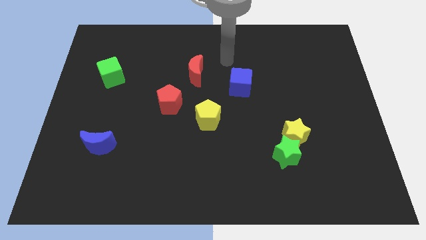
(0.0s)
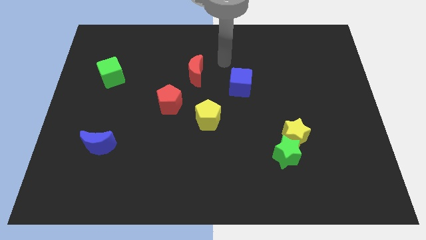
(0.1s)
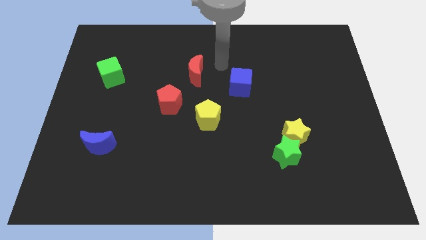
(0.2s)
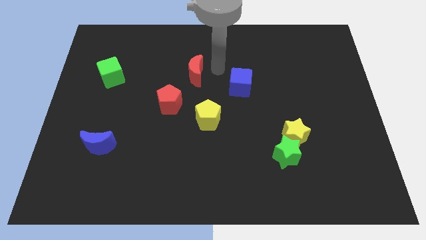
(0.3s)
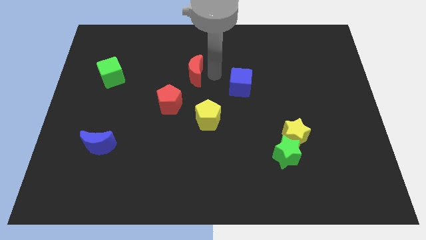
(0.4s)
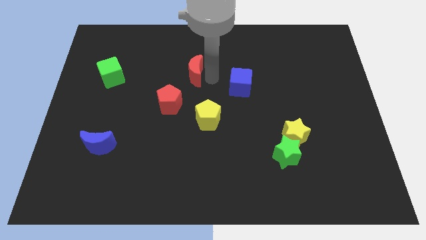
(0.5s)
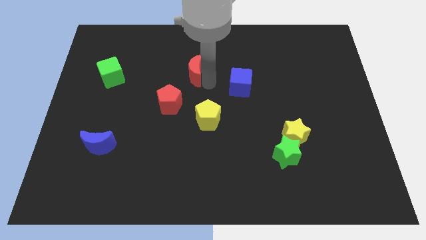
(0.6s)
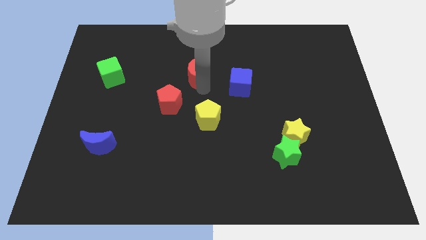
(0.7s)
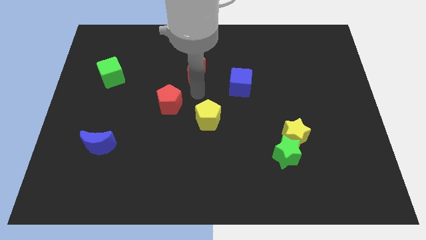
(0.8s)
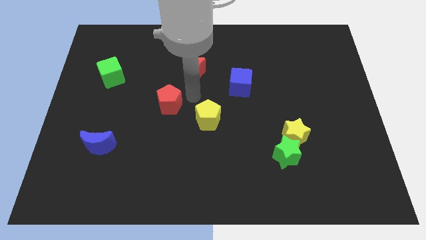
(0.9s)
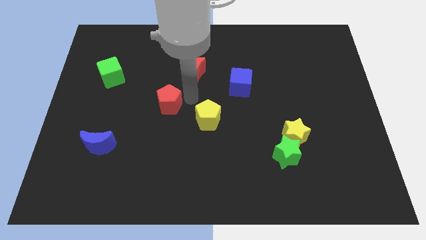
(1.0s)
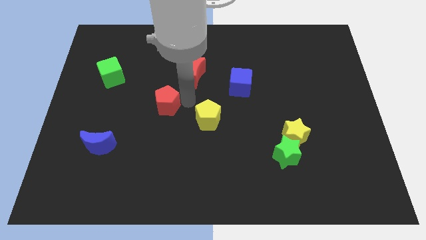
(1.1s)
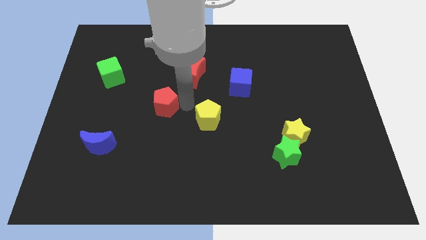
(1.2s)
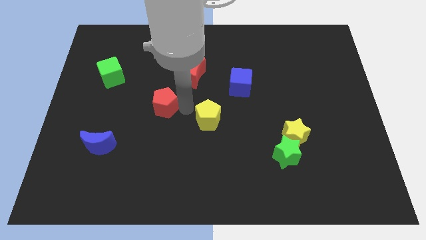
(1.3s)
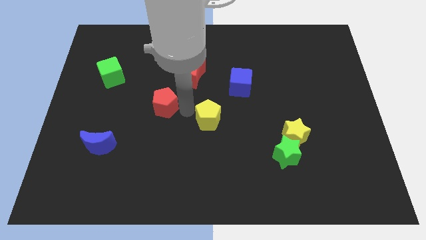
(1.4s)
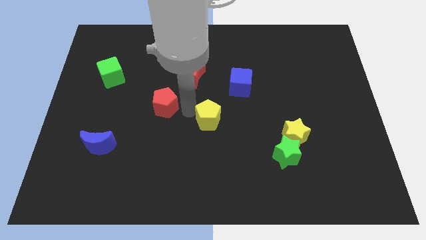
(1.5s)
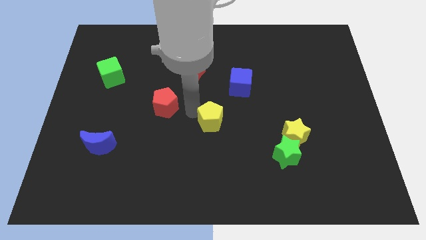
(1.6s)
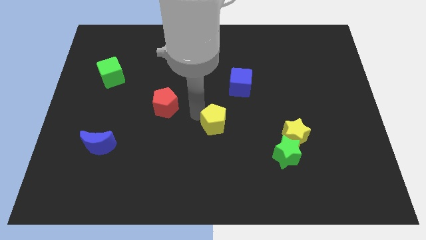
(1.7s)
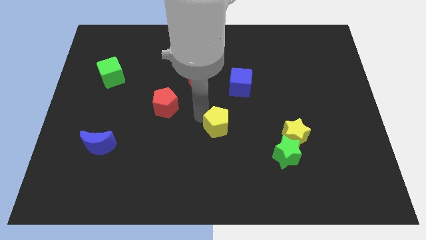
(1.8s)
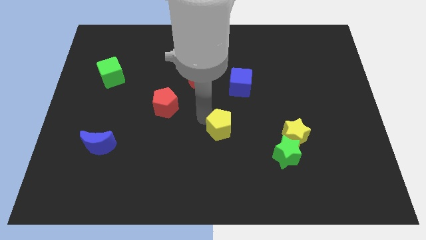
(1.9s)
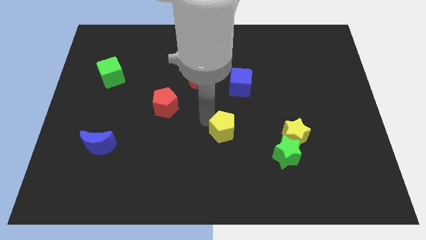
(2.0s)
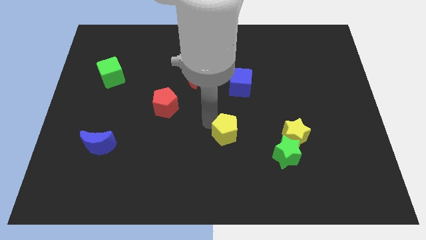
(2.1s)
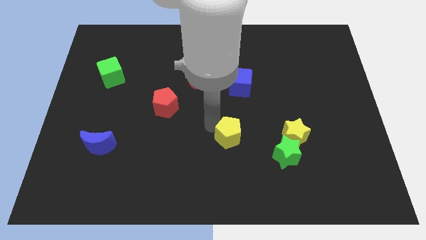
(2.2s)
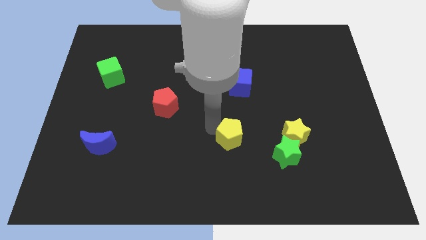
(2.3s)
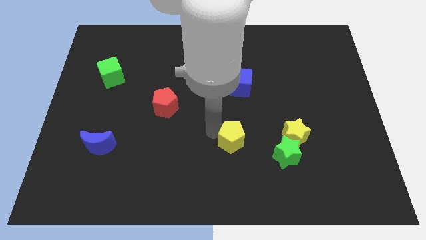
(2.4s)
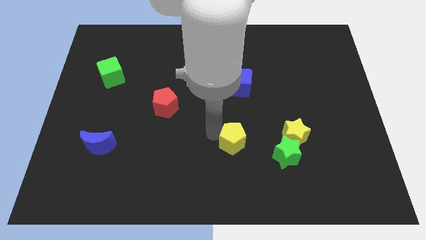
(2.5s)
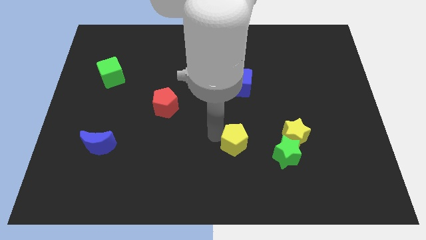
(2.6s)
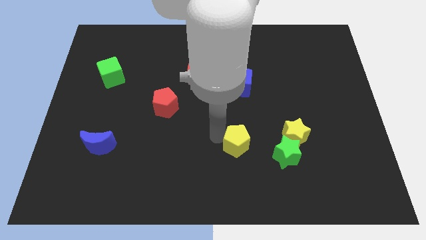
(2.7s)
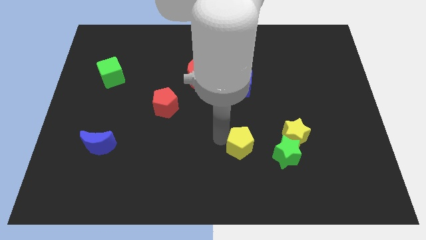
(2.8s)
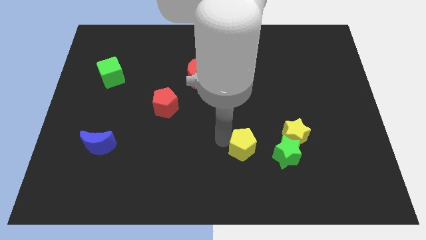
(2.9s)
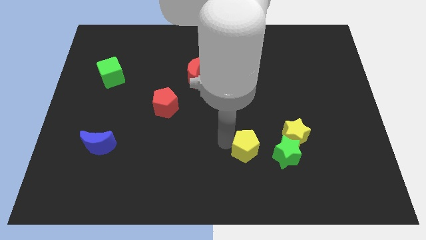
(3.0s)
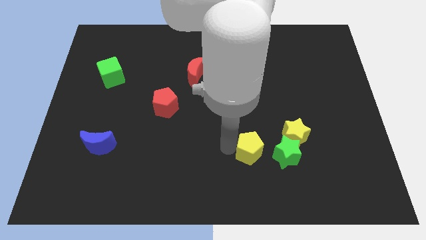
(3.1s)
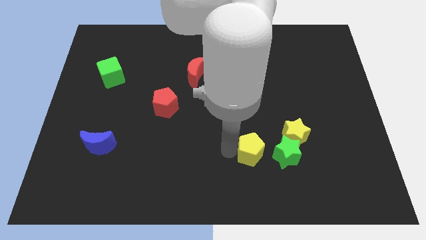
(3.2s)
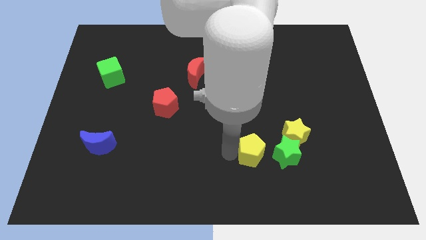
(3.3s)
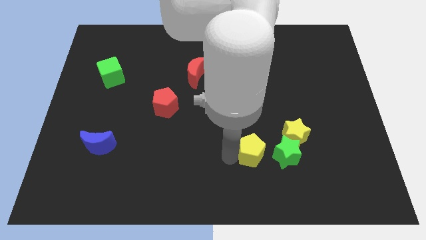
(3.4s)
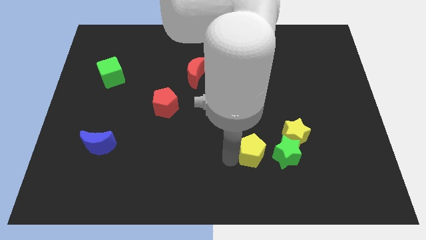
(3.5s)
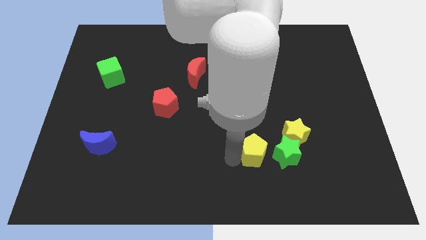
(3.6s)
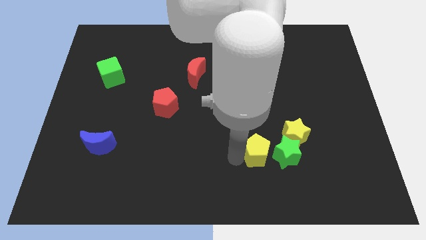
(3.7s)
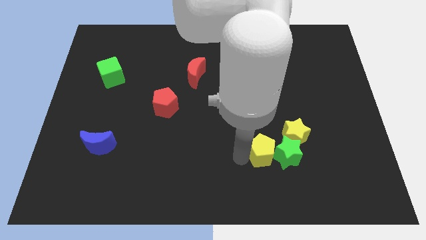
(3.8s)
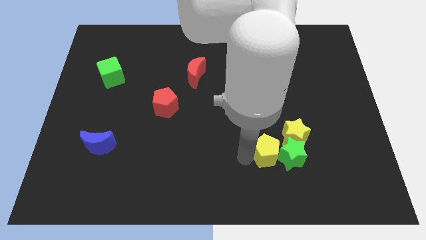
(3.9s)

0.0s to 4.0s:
slide the yellow pentagon close to the green star

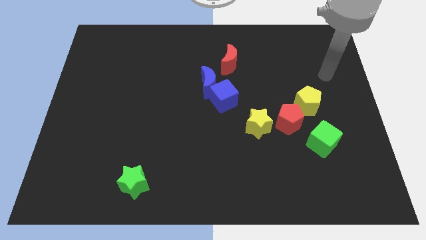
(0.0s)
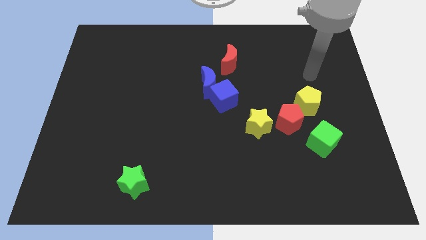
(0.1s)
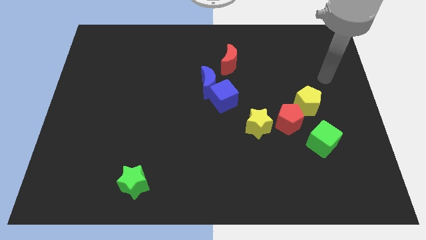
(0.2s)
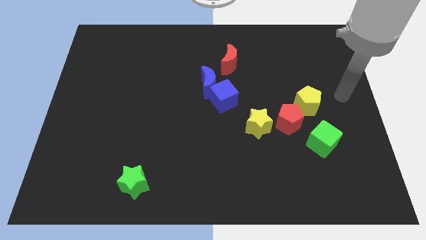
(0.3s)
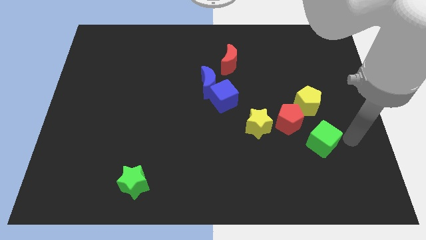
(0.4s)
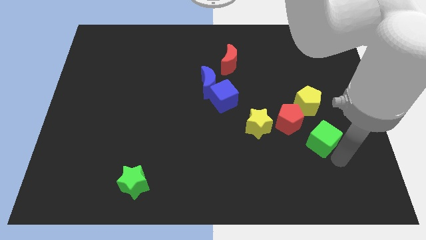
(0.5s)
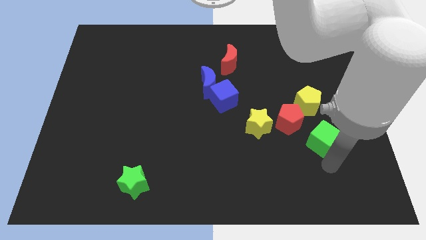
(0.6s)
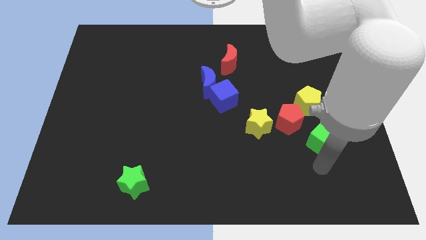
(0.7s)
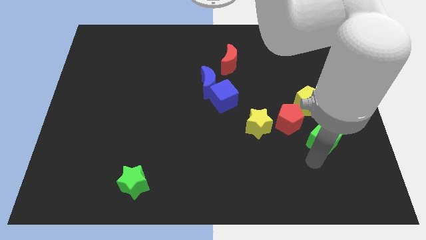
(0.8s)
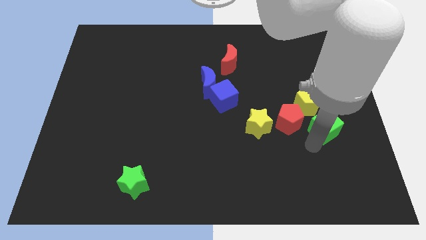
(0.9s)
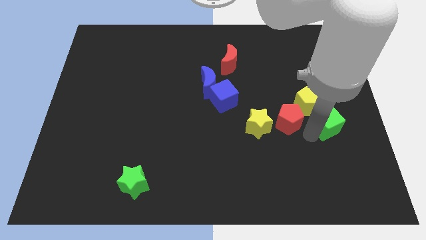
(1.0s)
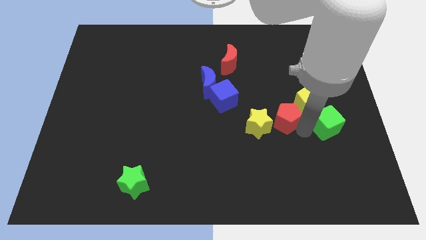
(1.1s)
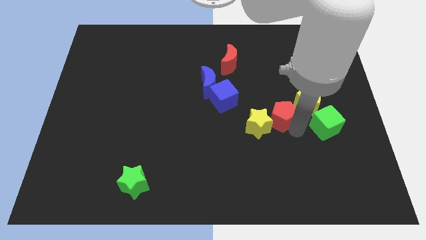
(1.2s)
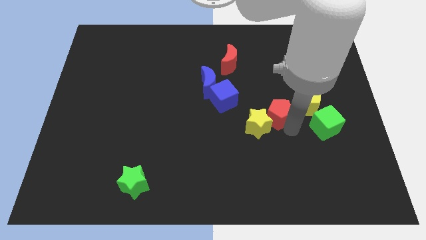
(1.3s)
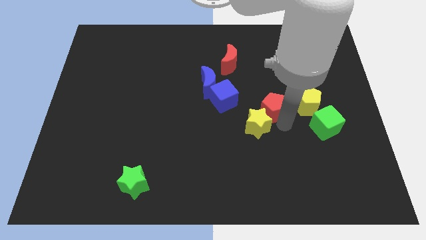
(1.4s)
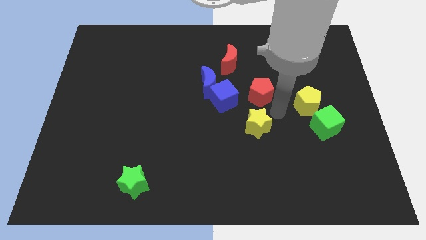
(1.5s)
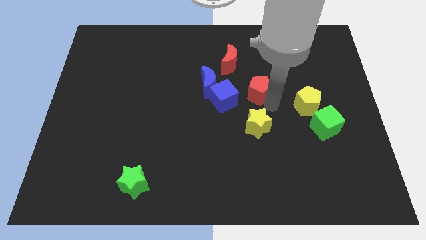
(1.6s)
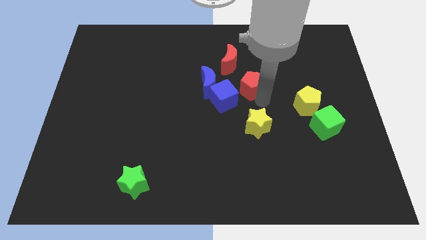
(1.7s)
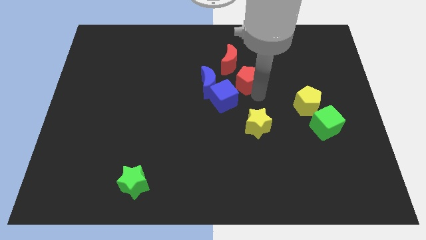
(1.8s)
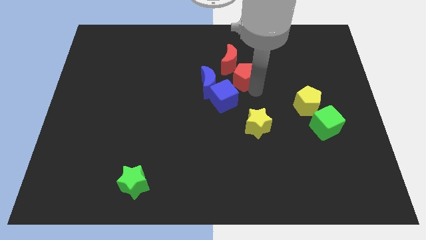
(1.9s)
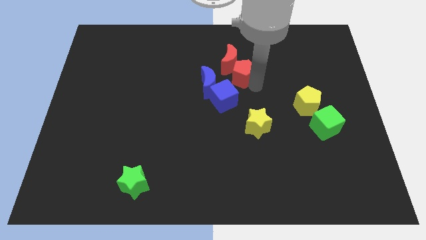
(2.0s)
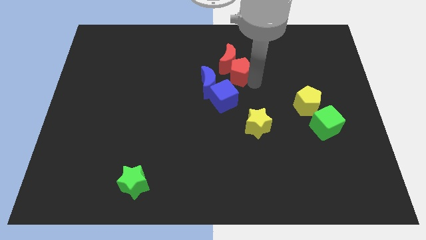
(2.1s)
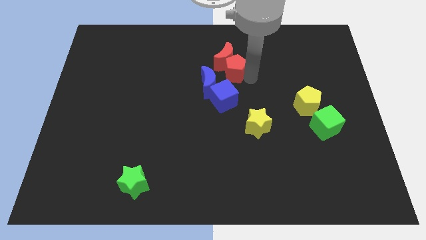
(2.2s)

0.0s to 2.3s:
put the red pentagon next to the red moon

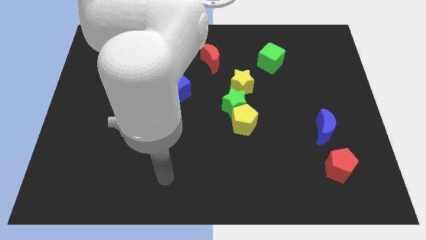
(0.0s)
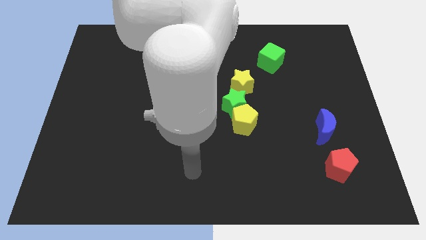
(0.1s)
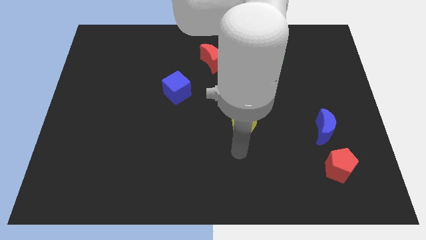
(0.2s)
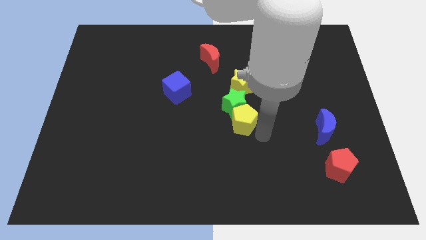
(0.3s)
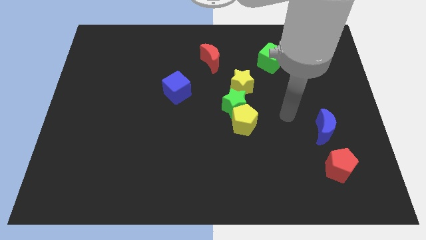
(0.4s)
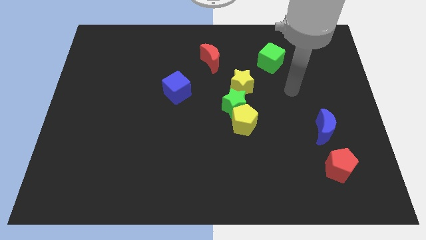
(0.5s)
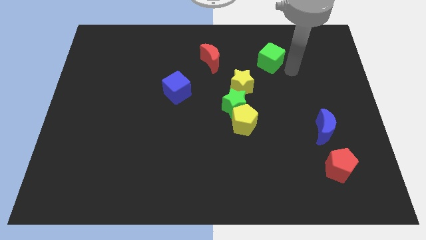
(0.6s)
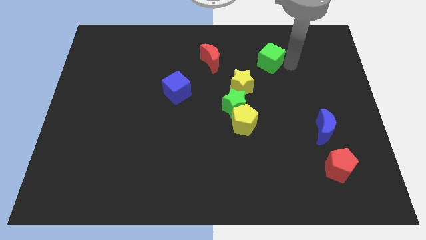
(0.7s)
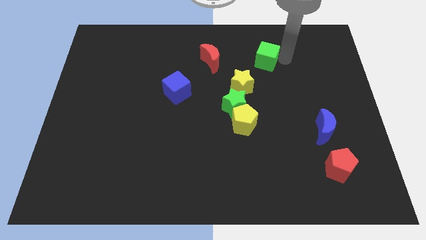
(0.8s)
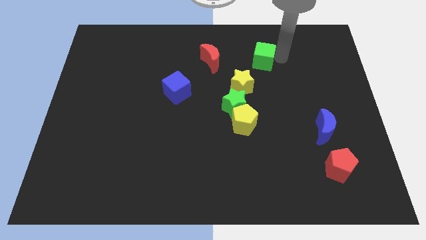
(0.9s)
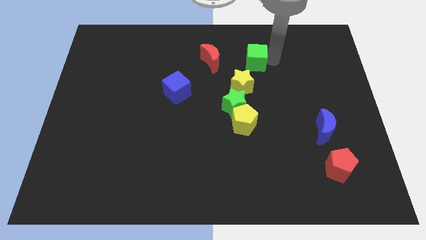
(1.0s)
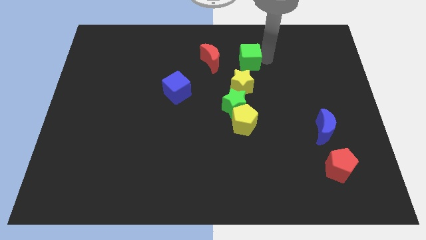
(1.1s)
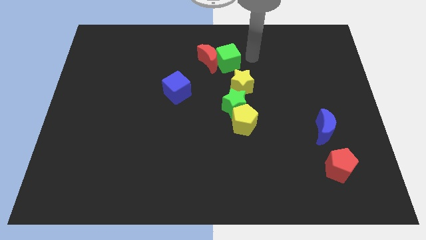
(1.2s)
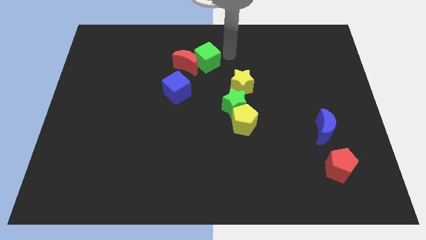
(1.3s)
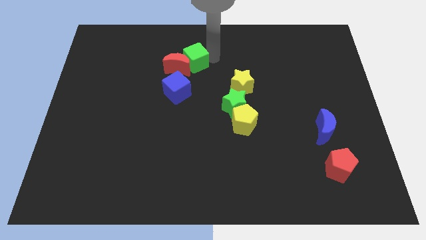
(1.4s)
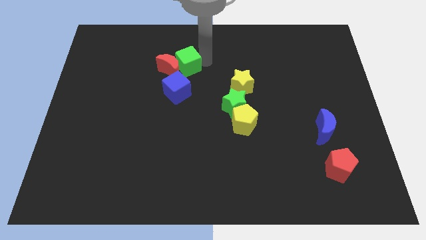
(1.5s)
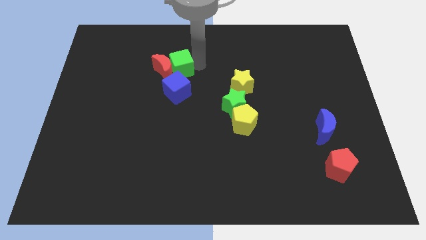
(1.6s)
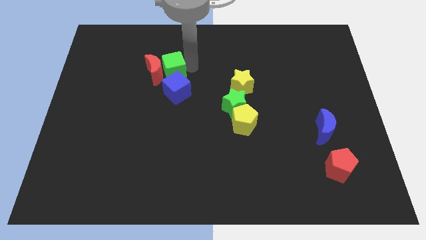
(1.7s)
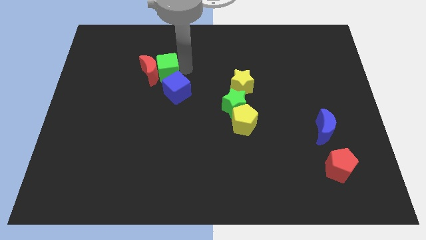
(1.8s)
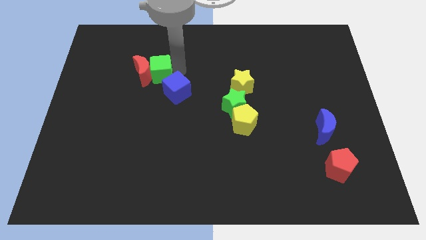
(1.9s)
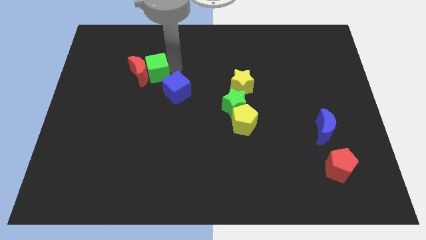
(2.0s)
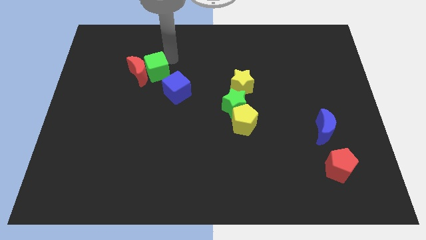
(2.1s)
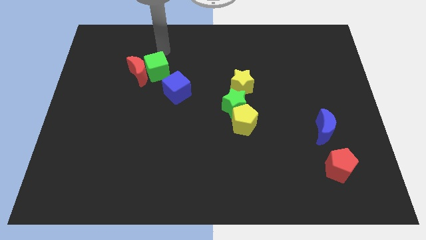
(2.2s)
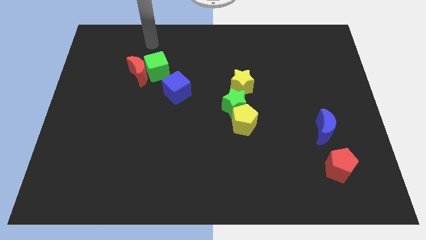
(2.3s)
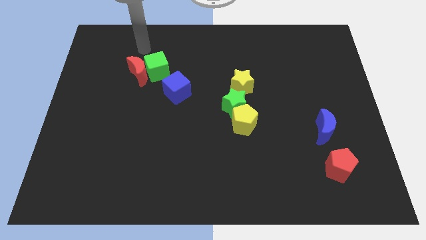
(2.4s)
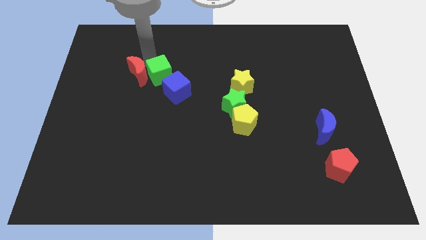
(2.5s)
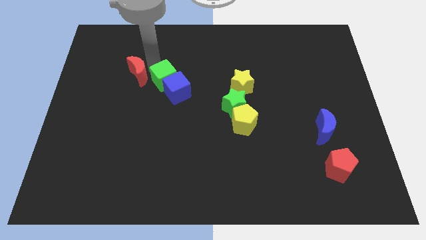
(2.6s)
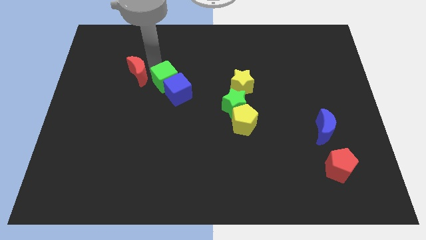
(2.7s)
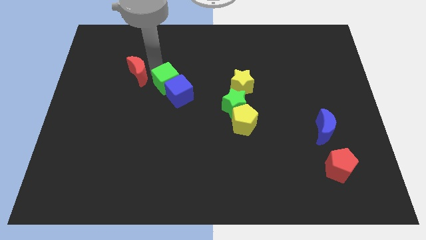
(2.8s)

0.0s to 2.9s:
move the green cube towards the blue cube
